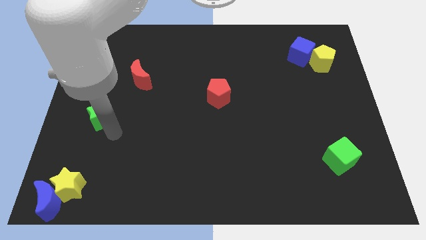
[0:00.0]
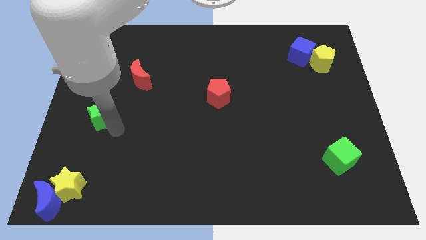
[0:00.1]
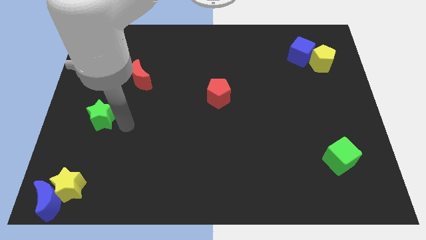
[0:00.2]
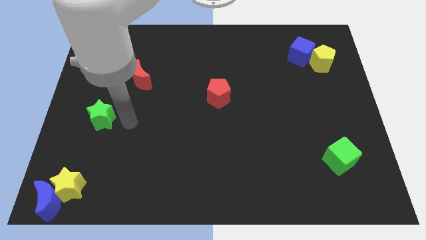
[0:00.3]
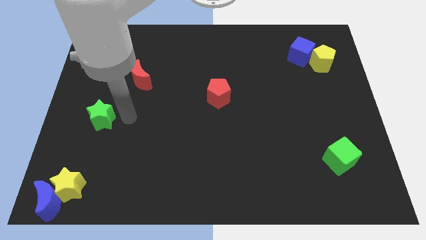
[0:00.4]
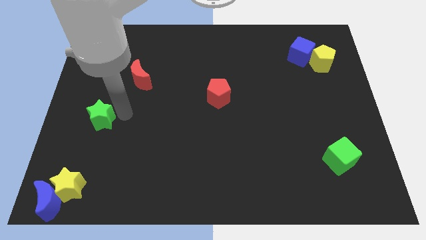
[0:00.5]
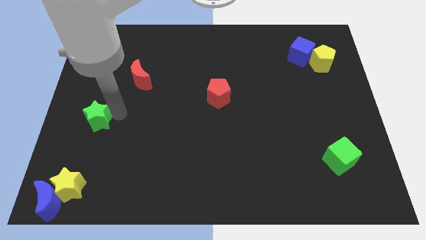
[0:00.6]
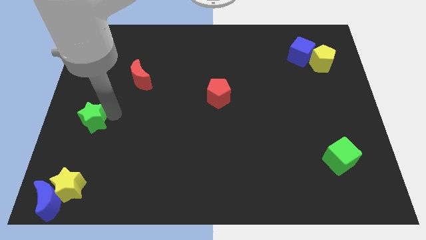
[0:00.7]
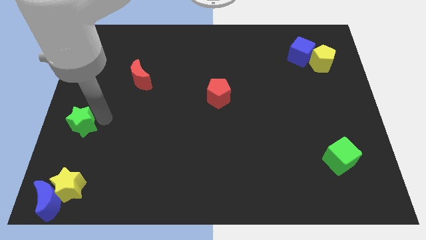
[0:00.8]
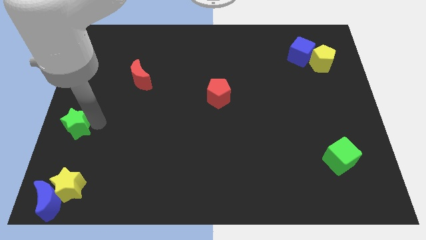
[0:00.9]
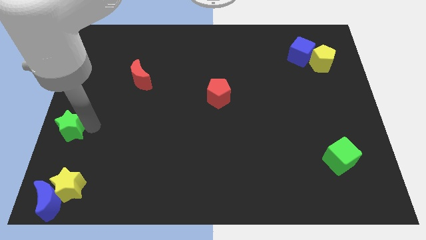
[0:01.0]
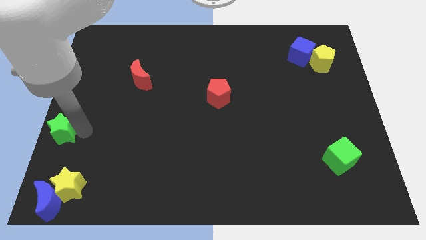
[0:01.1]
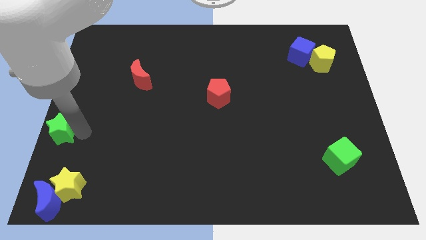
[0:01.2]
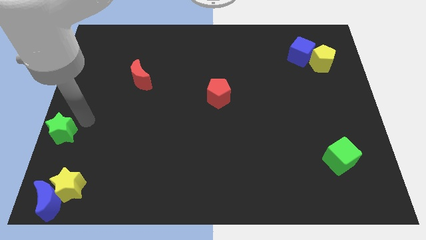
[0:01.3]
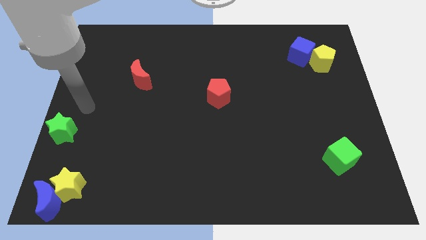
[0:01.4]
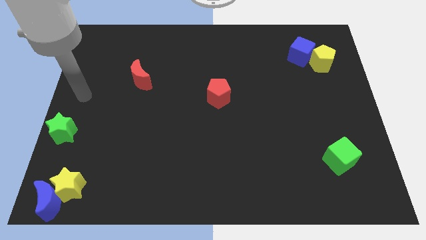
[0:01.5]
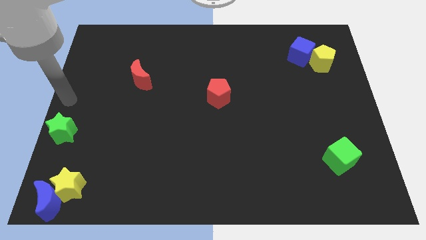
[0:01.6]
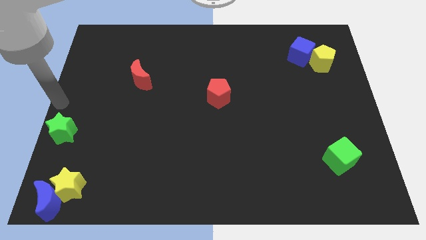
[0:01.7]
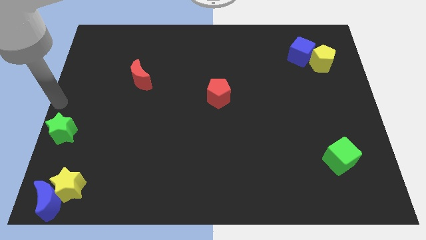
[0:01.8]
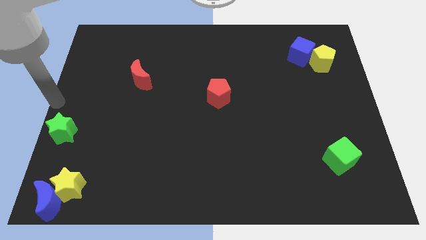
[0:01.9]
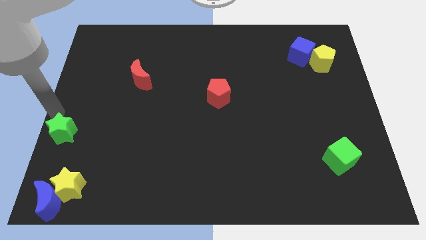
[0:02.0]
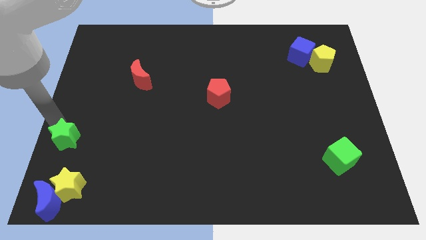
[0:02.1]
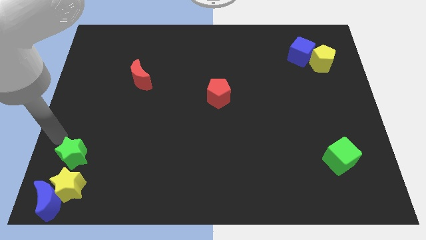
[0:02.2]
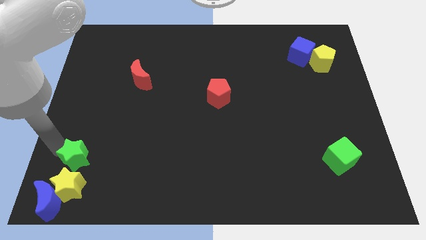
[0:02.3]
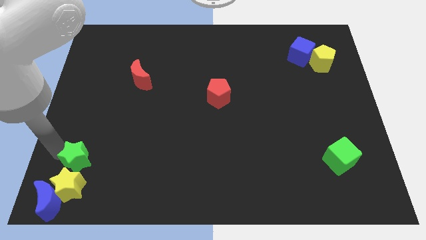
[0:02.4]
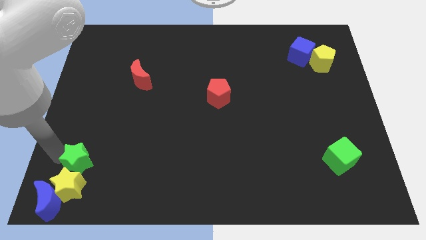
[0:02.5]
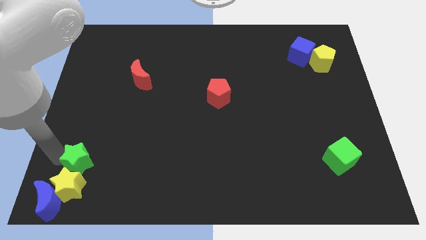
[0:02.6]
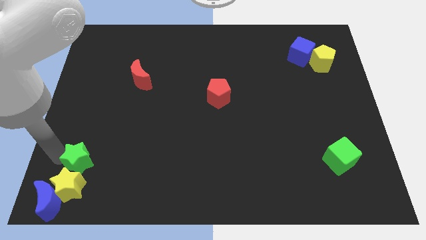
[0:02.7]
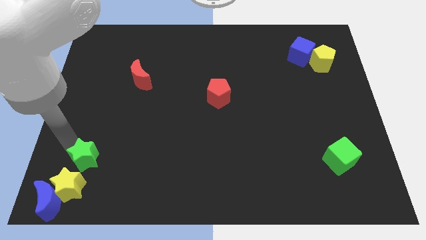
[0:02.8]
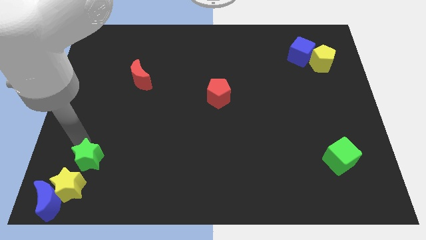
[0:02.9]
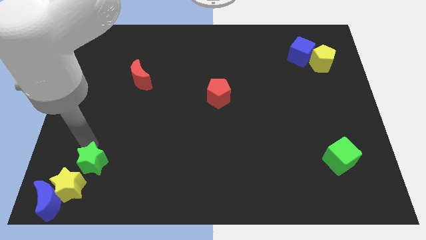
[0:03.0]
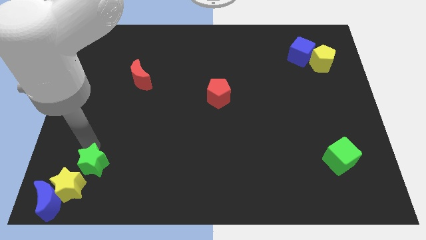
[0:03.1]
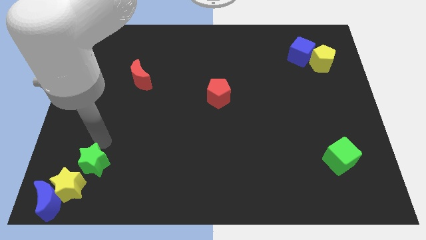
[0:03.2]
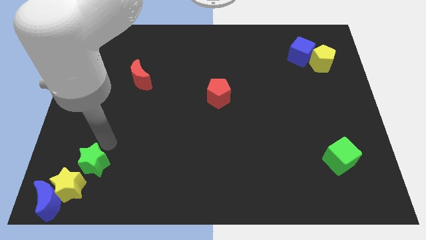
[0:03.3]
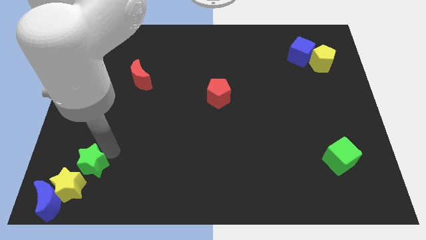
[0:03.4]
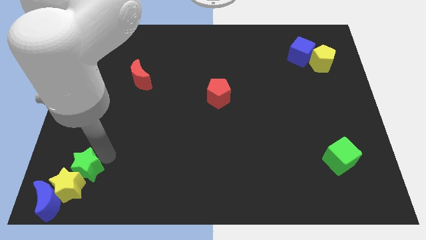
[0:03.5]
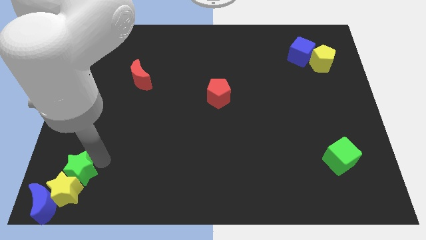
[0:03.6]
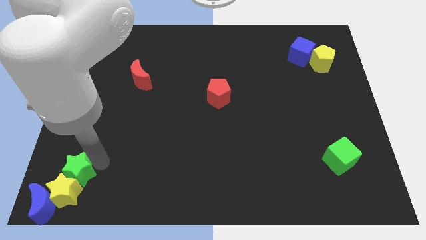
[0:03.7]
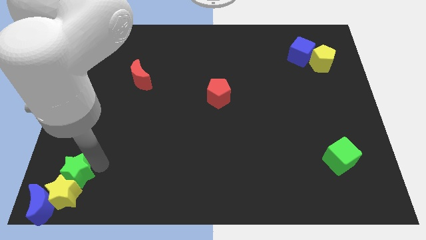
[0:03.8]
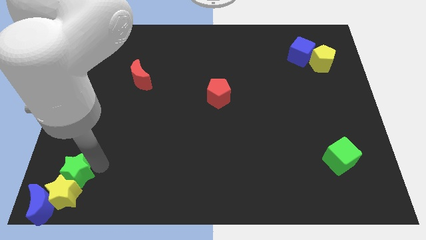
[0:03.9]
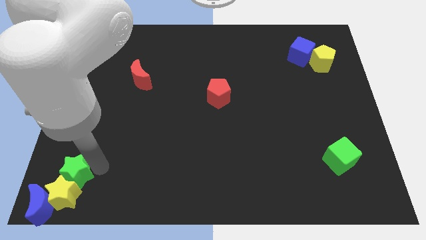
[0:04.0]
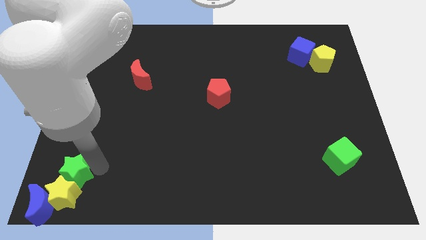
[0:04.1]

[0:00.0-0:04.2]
push the green star into the yellow star

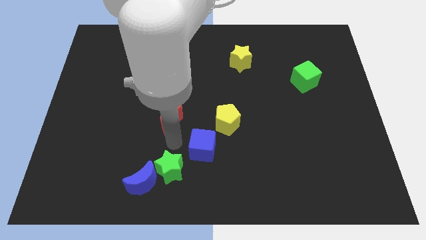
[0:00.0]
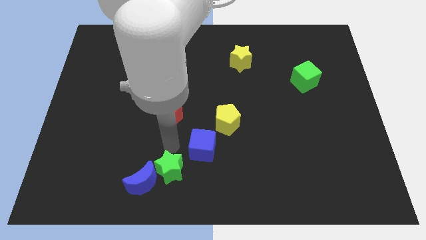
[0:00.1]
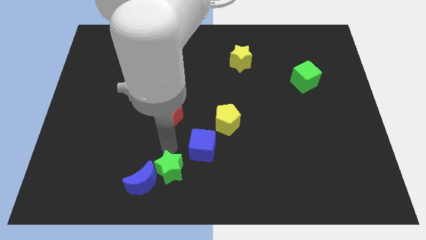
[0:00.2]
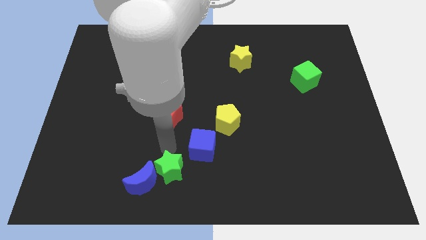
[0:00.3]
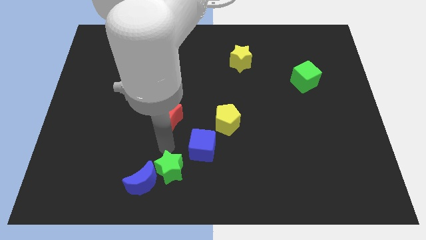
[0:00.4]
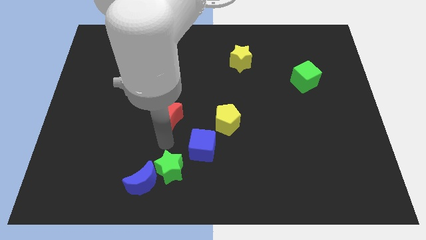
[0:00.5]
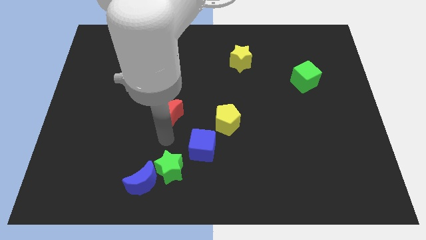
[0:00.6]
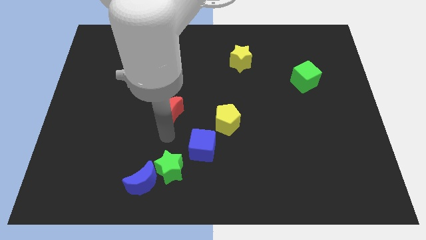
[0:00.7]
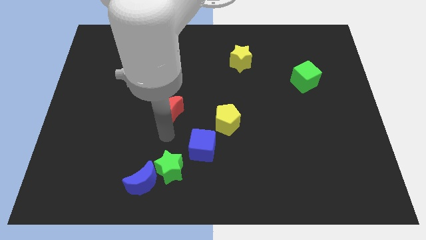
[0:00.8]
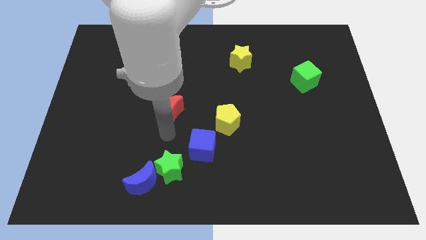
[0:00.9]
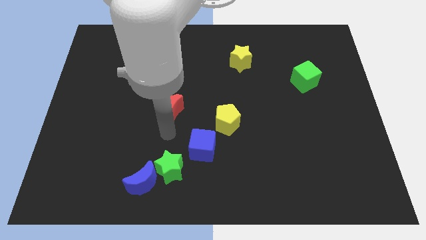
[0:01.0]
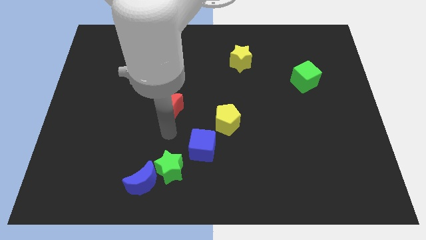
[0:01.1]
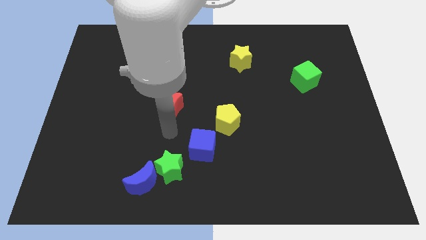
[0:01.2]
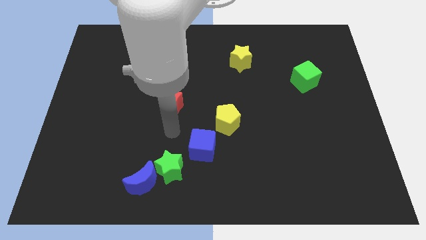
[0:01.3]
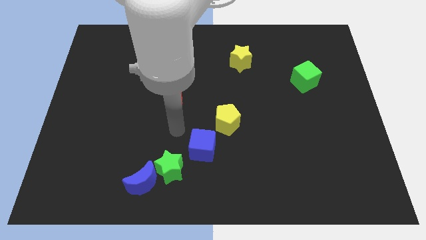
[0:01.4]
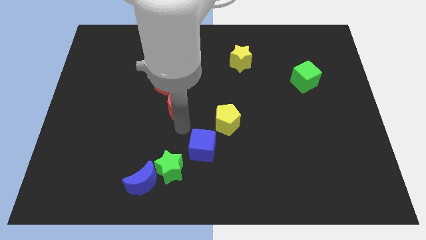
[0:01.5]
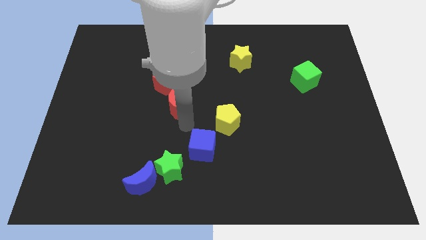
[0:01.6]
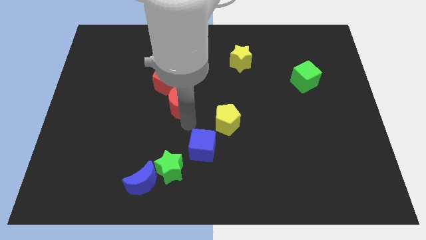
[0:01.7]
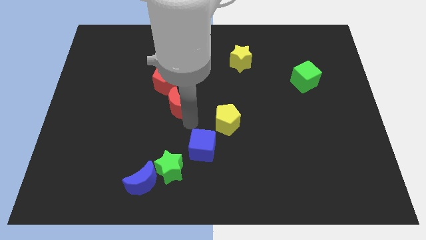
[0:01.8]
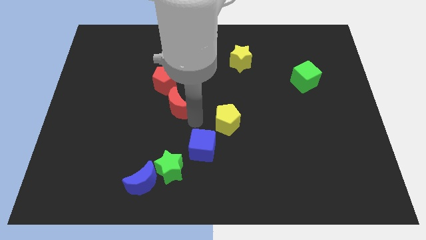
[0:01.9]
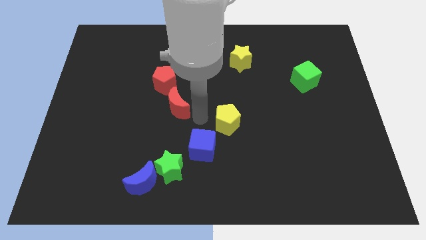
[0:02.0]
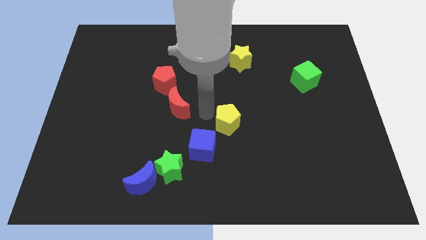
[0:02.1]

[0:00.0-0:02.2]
slightly move the red moon up

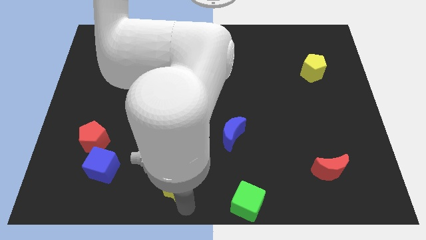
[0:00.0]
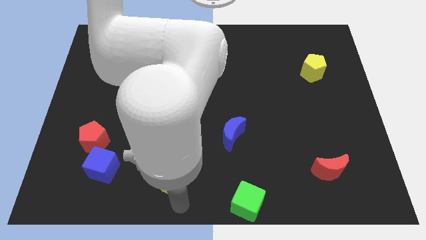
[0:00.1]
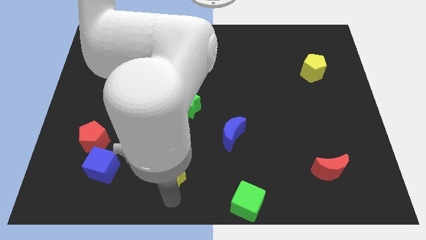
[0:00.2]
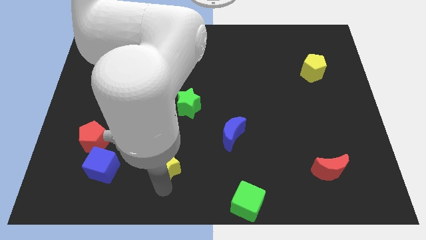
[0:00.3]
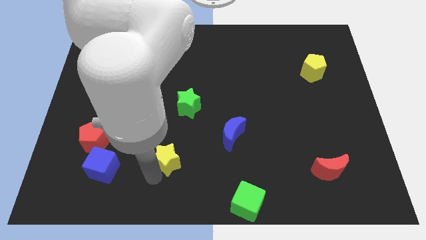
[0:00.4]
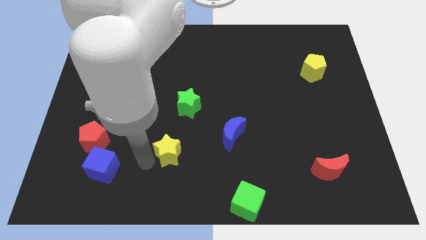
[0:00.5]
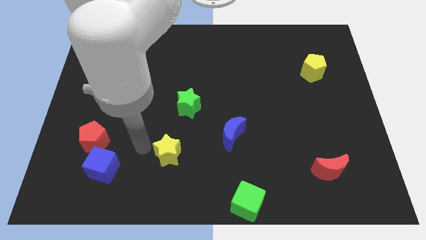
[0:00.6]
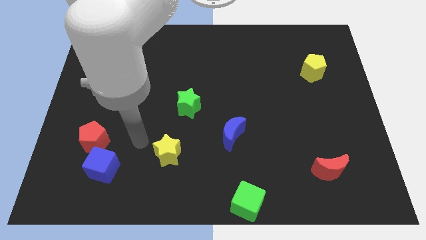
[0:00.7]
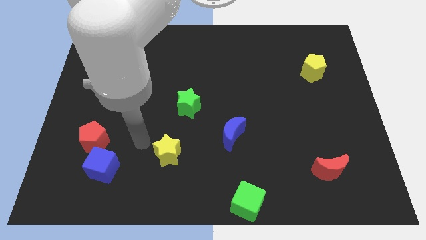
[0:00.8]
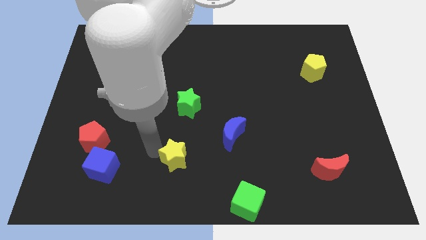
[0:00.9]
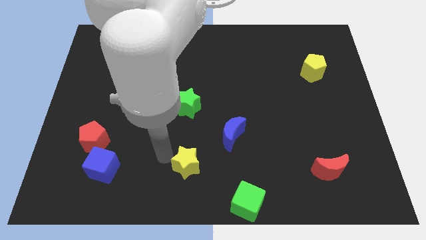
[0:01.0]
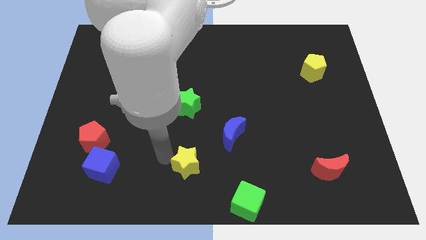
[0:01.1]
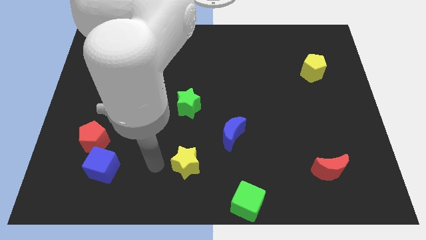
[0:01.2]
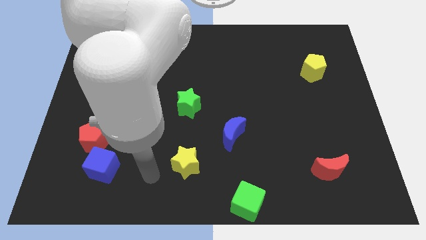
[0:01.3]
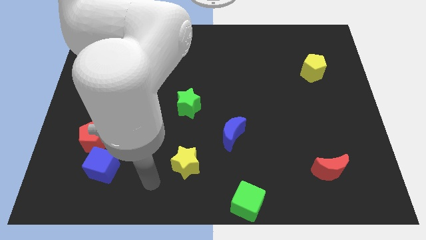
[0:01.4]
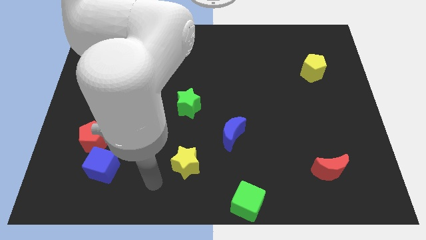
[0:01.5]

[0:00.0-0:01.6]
place yellow star to the bottom of green star

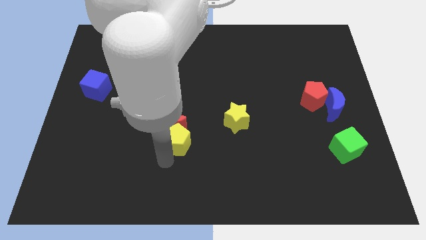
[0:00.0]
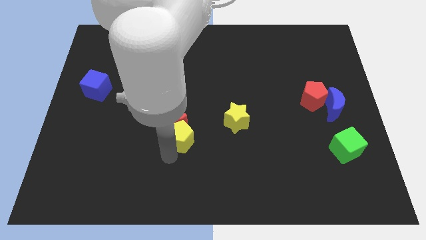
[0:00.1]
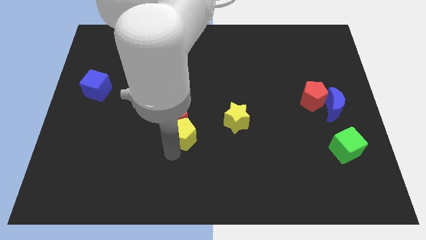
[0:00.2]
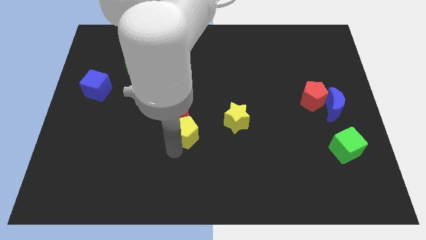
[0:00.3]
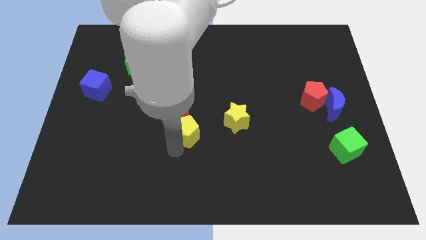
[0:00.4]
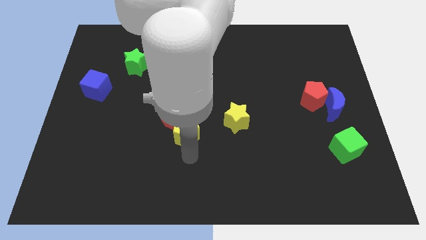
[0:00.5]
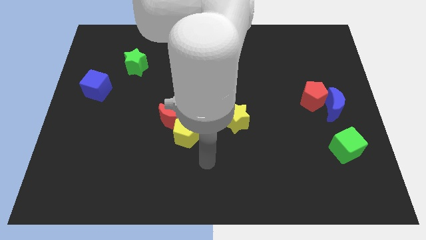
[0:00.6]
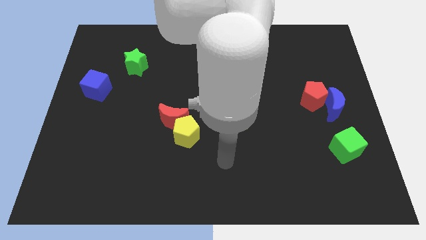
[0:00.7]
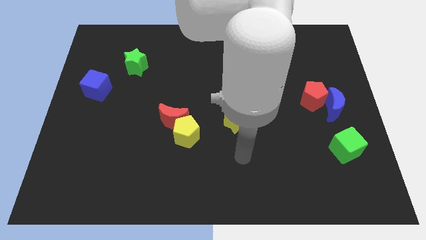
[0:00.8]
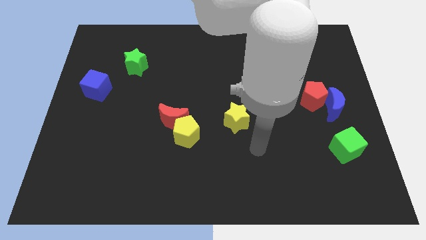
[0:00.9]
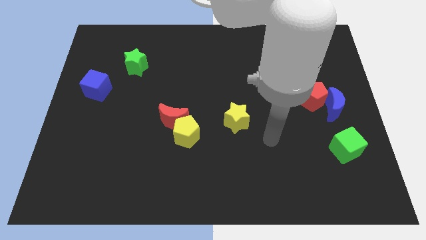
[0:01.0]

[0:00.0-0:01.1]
push the yellow pentagon along with the red moon slightly up
